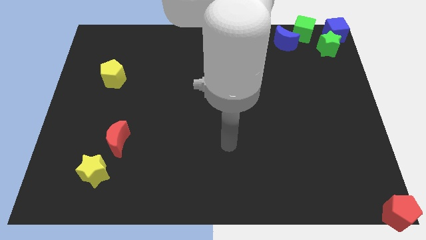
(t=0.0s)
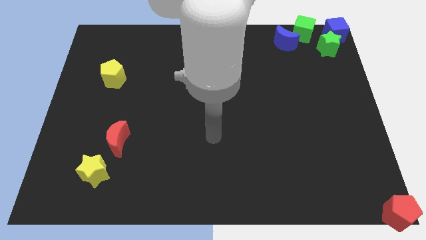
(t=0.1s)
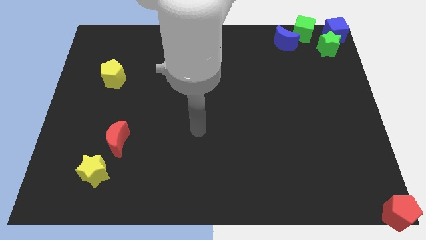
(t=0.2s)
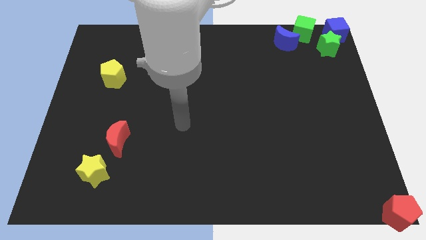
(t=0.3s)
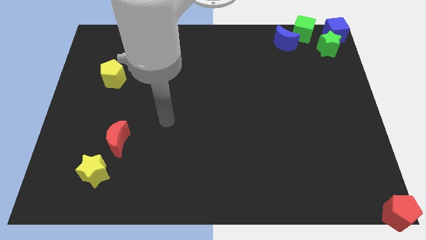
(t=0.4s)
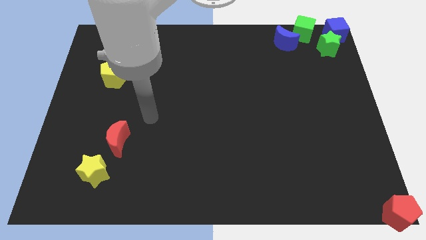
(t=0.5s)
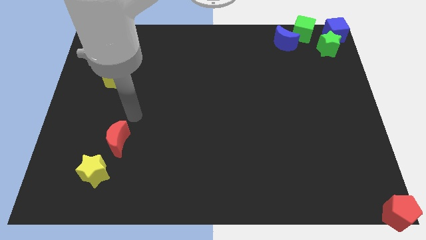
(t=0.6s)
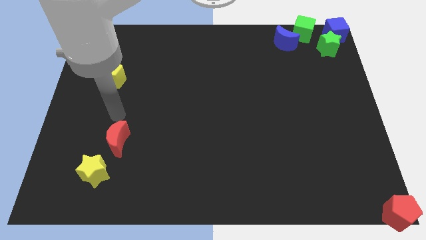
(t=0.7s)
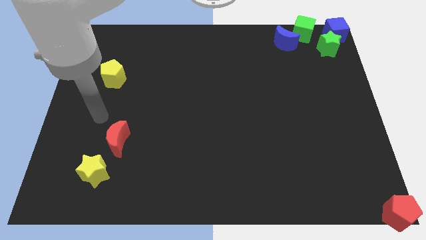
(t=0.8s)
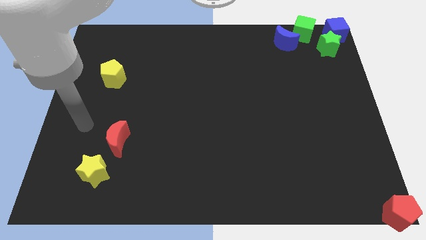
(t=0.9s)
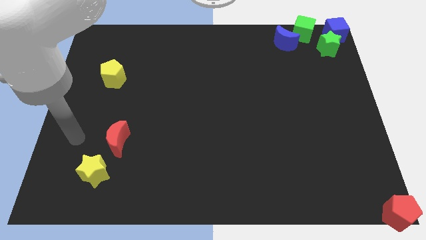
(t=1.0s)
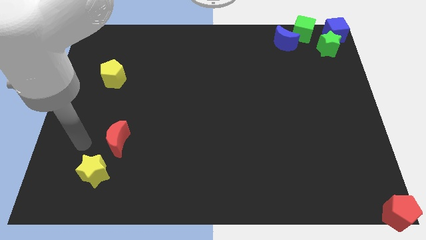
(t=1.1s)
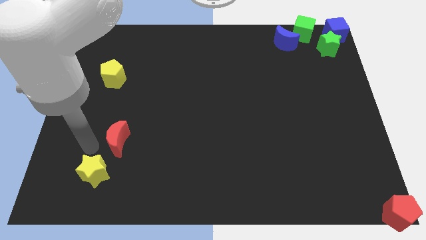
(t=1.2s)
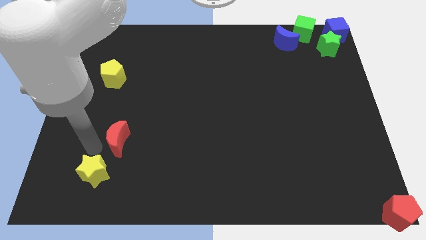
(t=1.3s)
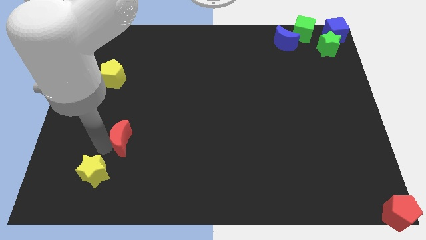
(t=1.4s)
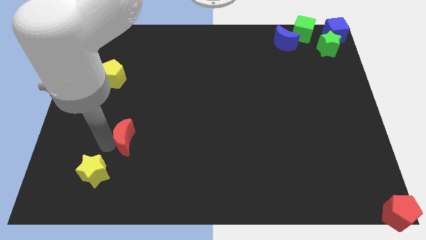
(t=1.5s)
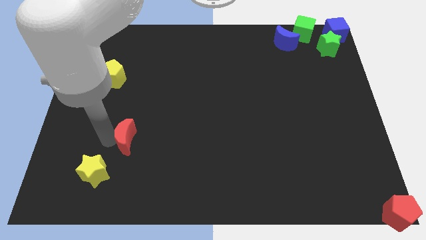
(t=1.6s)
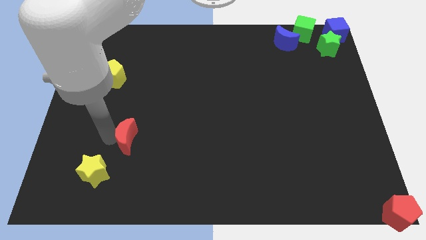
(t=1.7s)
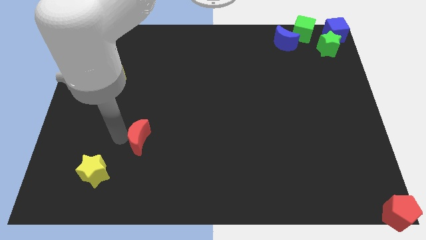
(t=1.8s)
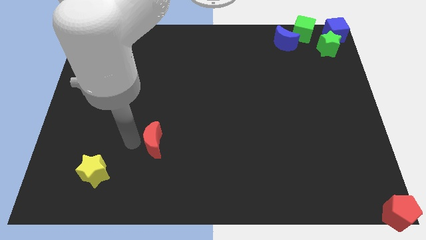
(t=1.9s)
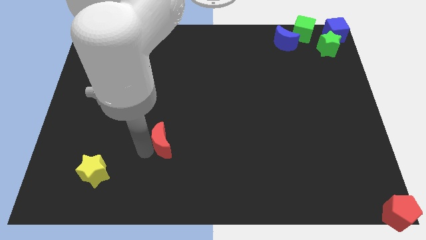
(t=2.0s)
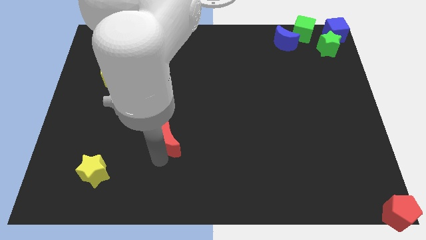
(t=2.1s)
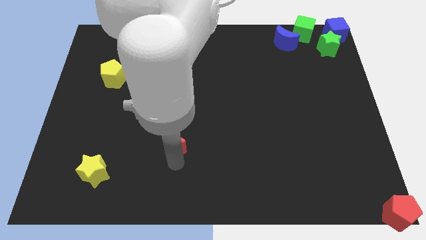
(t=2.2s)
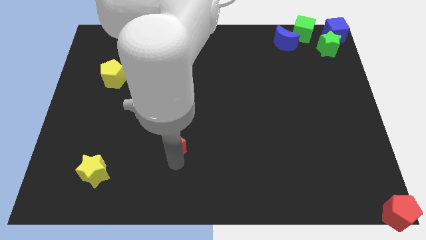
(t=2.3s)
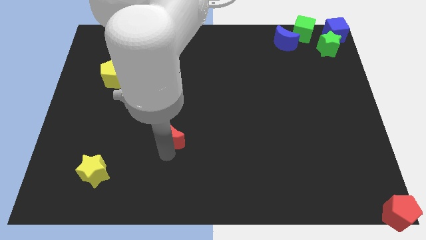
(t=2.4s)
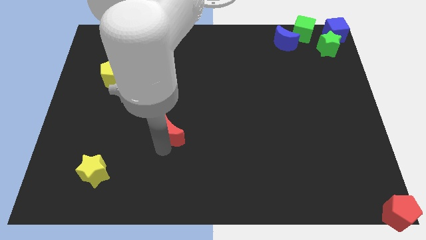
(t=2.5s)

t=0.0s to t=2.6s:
move the red moon towards the center

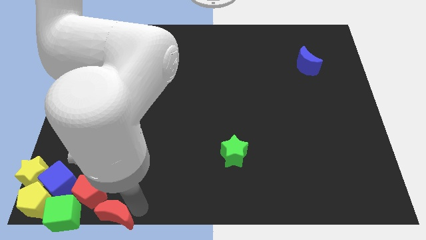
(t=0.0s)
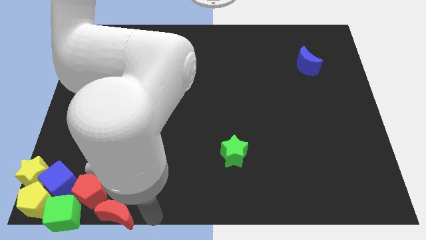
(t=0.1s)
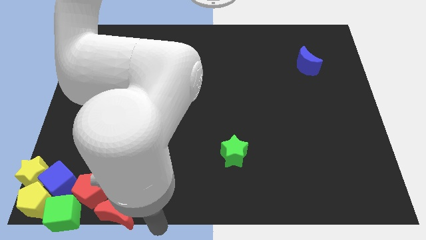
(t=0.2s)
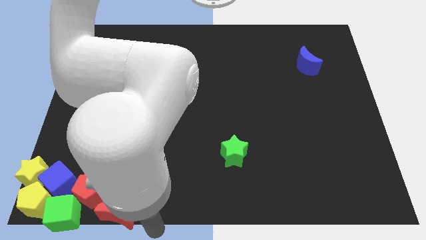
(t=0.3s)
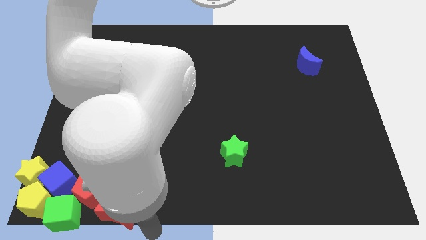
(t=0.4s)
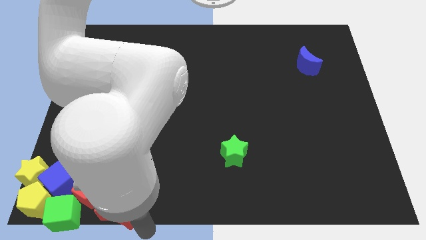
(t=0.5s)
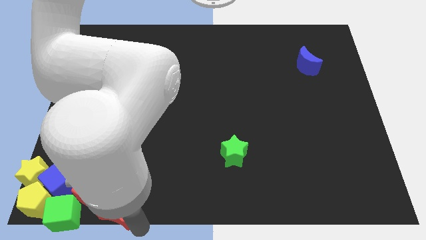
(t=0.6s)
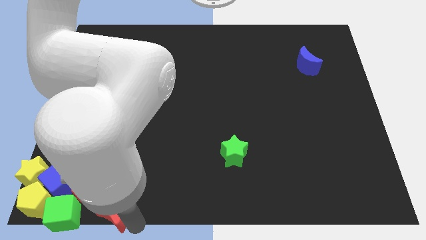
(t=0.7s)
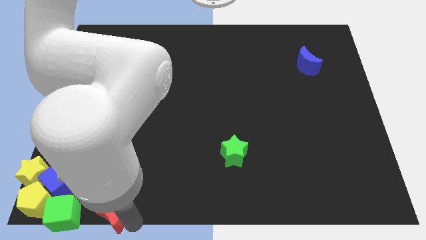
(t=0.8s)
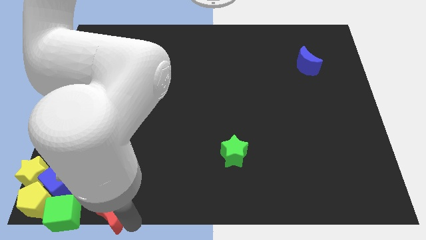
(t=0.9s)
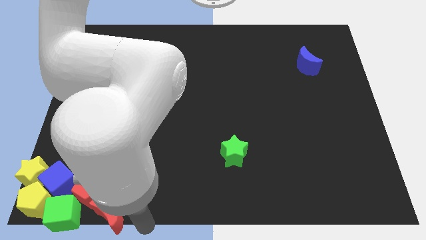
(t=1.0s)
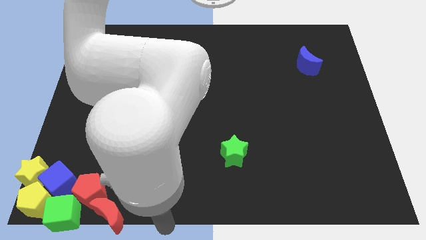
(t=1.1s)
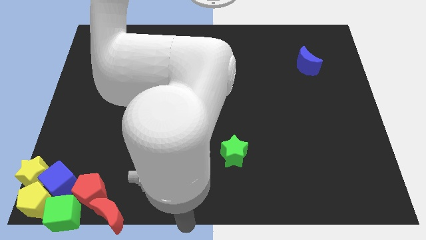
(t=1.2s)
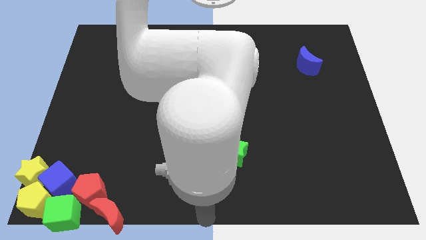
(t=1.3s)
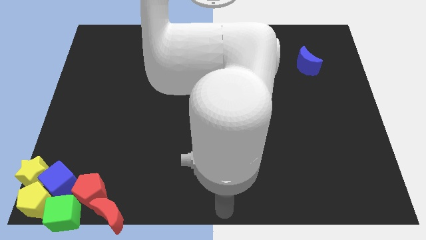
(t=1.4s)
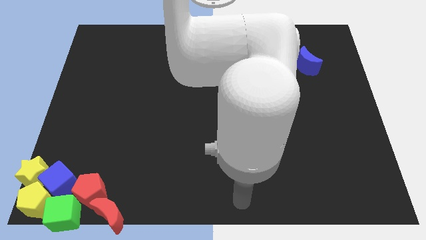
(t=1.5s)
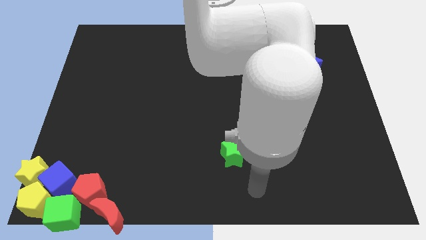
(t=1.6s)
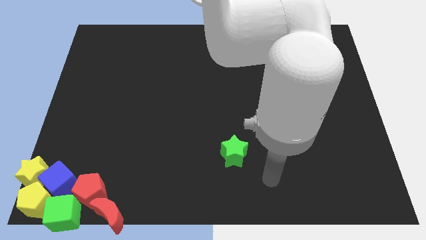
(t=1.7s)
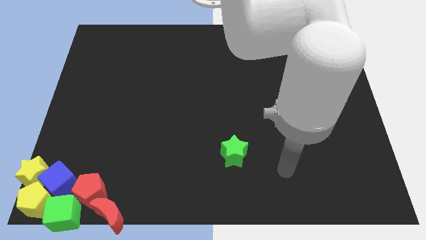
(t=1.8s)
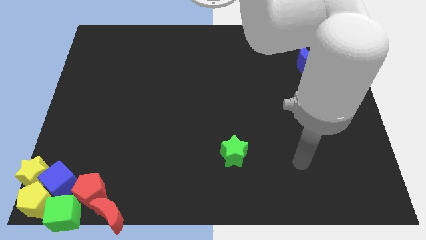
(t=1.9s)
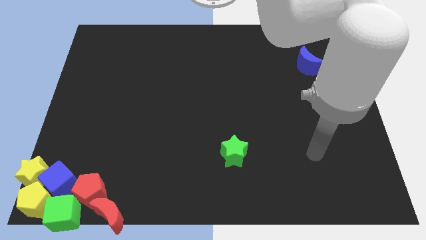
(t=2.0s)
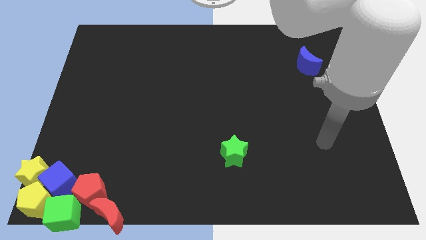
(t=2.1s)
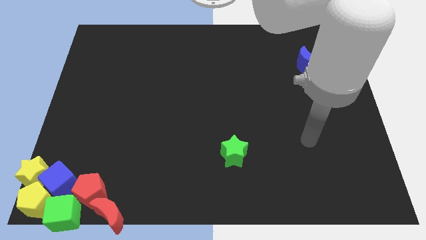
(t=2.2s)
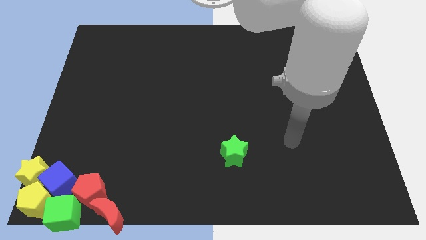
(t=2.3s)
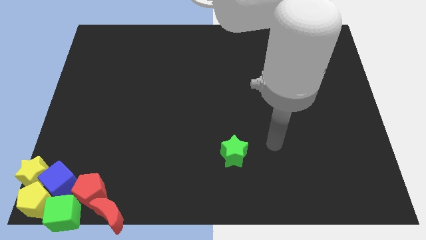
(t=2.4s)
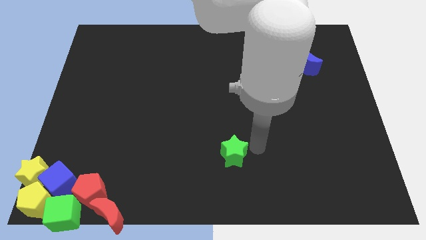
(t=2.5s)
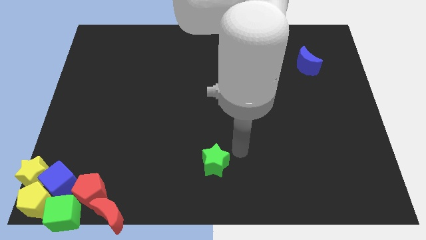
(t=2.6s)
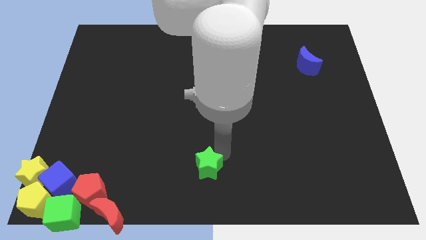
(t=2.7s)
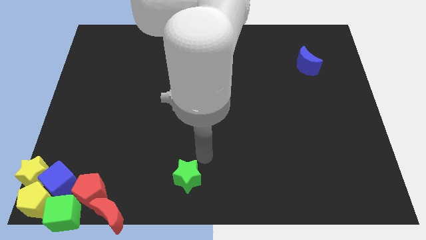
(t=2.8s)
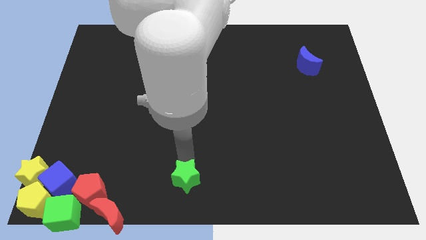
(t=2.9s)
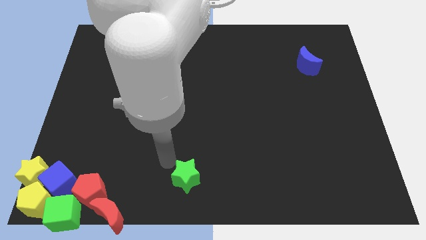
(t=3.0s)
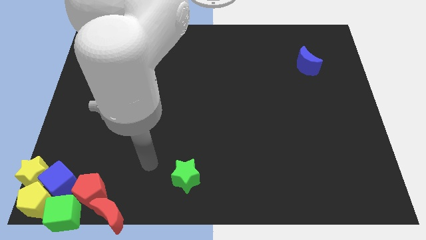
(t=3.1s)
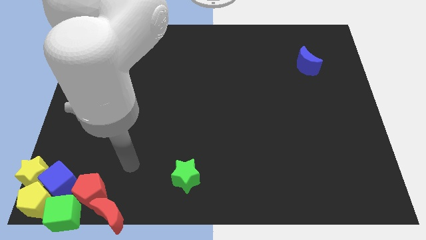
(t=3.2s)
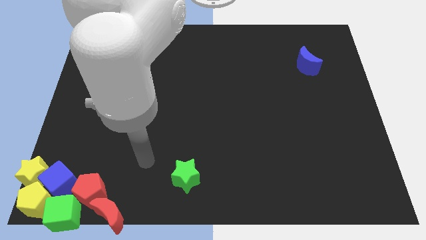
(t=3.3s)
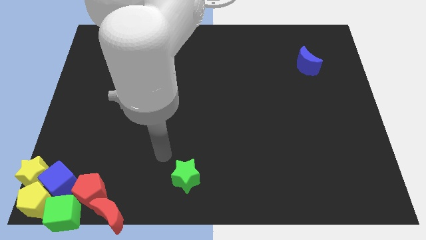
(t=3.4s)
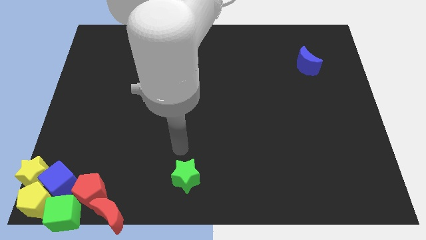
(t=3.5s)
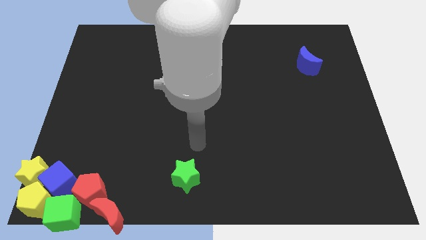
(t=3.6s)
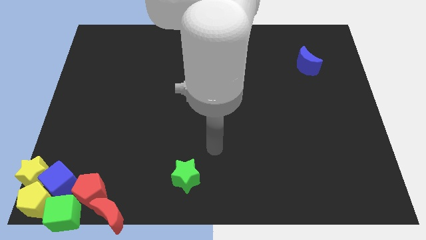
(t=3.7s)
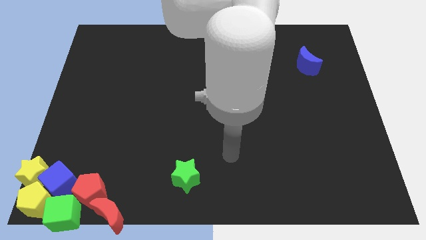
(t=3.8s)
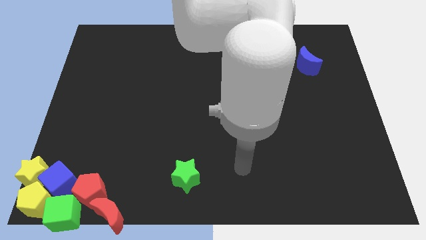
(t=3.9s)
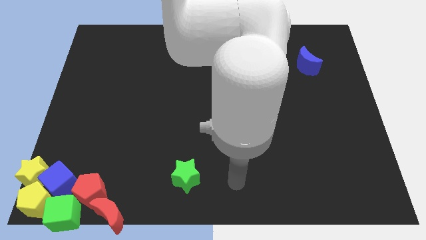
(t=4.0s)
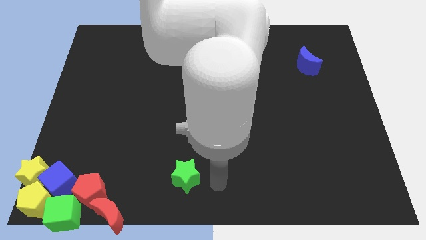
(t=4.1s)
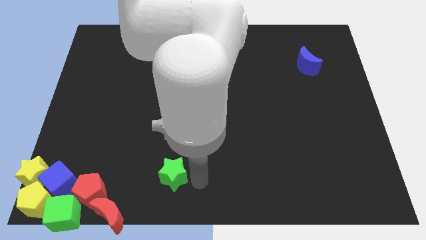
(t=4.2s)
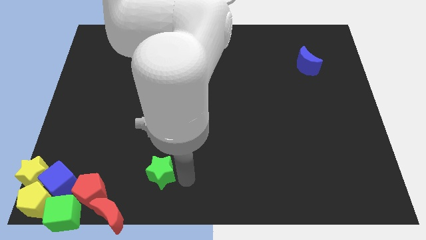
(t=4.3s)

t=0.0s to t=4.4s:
push the green star towards the group of blocks

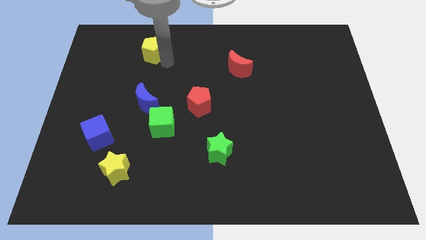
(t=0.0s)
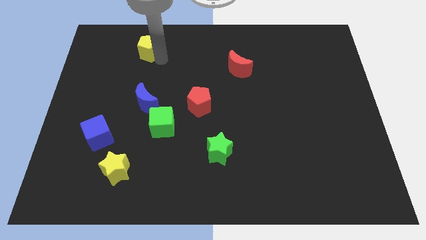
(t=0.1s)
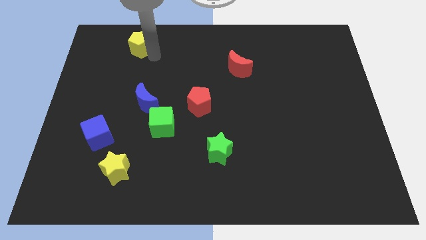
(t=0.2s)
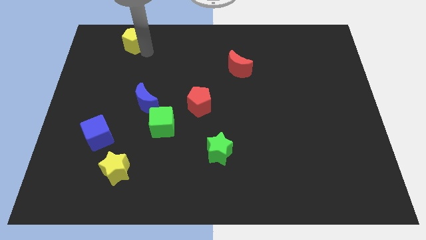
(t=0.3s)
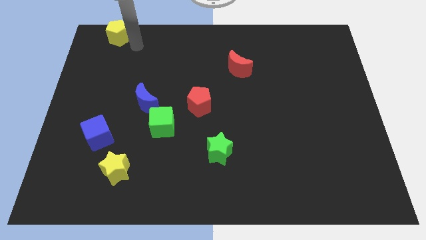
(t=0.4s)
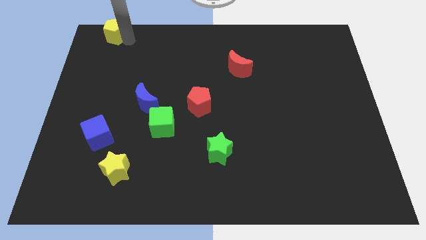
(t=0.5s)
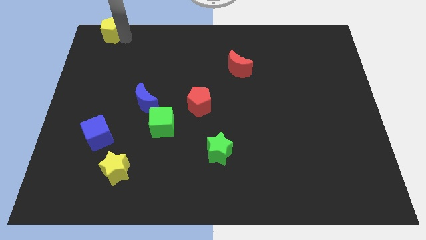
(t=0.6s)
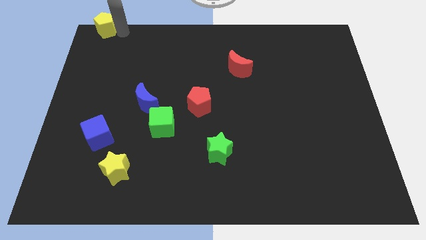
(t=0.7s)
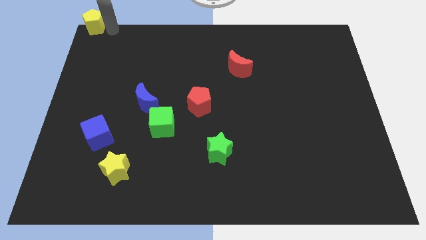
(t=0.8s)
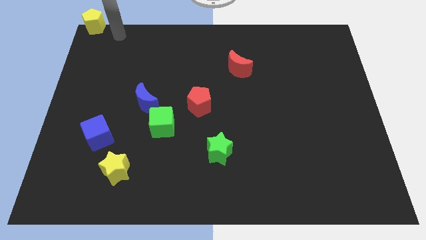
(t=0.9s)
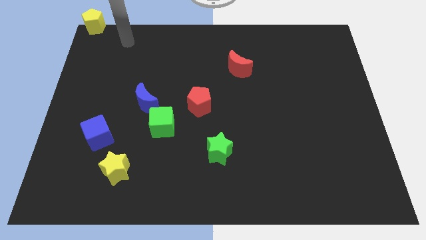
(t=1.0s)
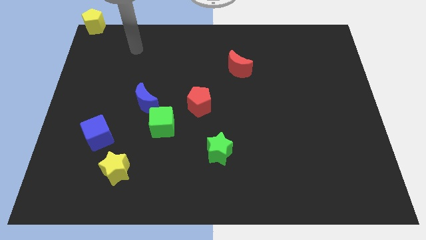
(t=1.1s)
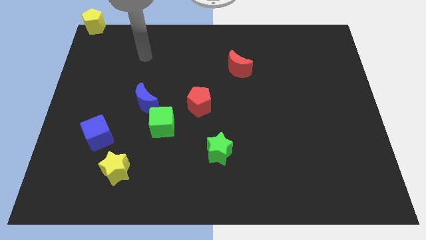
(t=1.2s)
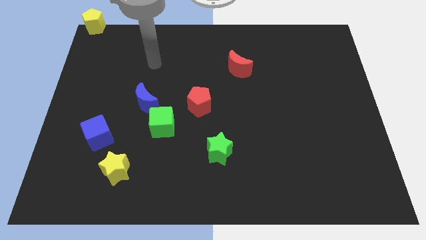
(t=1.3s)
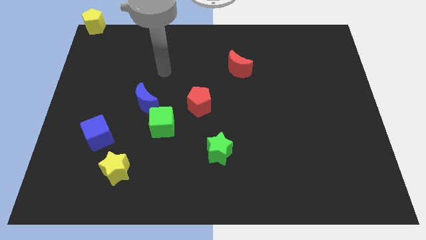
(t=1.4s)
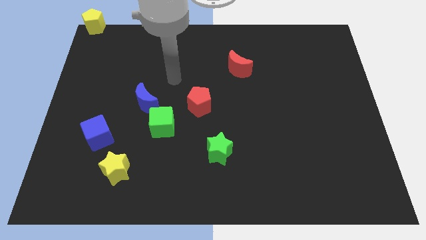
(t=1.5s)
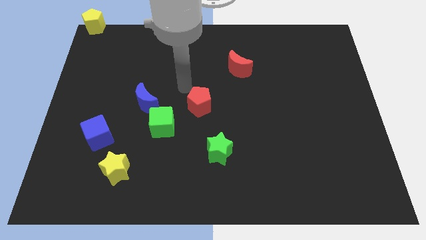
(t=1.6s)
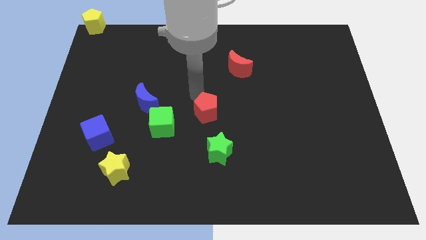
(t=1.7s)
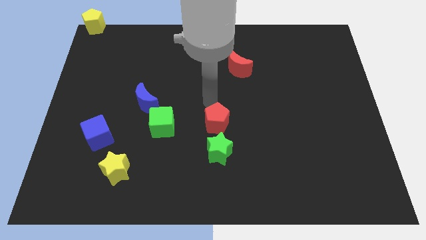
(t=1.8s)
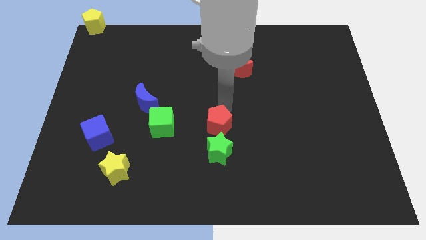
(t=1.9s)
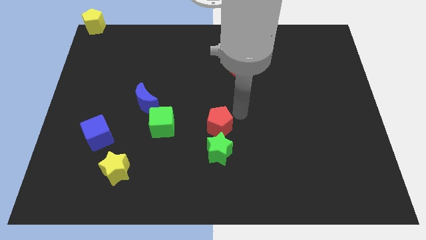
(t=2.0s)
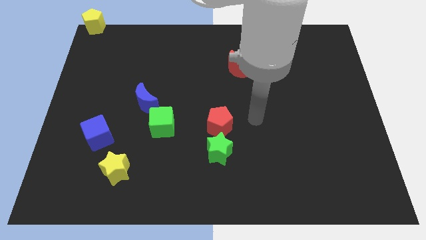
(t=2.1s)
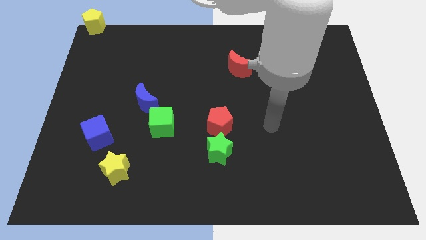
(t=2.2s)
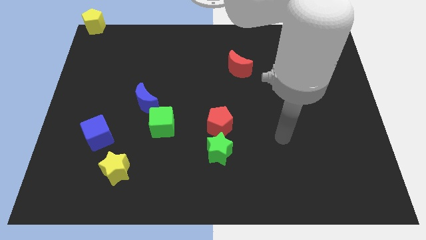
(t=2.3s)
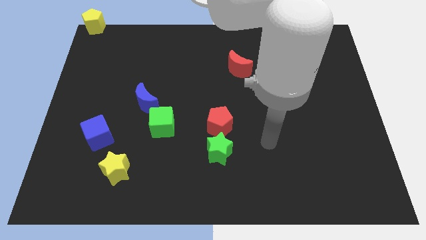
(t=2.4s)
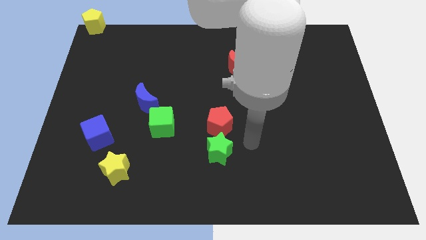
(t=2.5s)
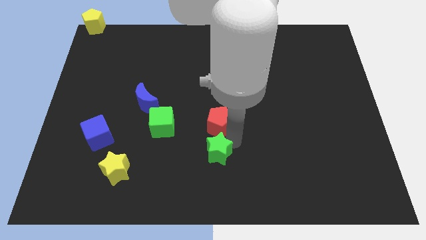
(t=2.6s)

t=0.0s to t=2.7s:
move the red pentagon above the green star
